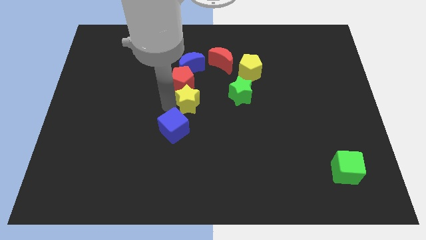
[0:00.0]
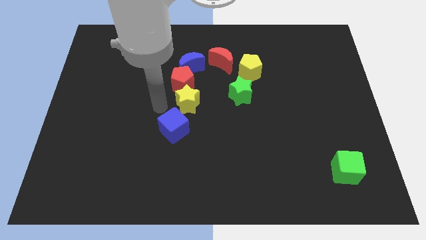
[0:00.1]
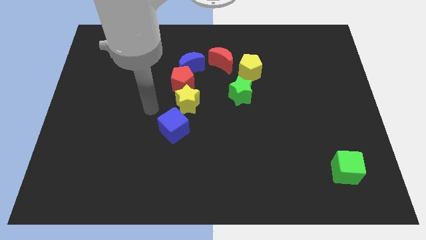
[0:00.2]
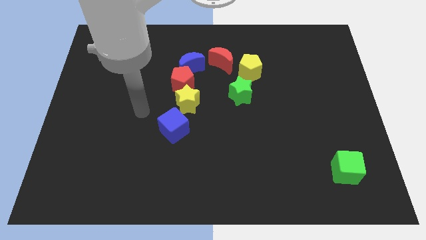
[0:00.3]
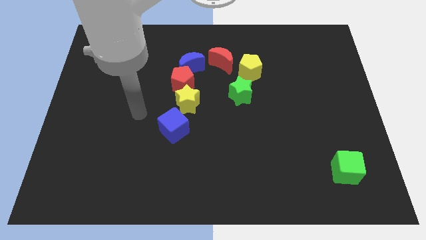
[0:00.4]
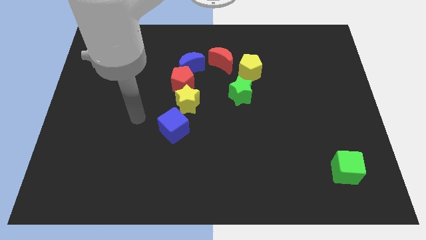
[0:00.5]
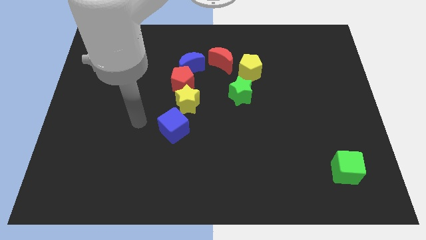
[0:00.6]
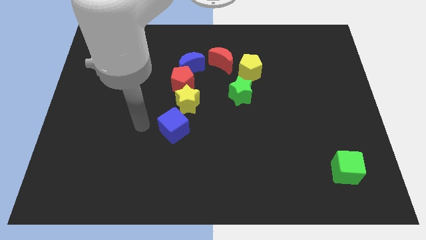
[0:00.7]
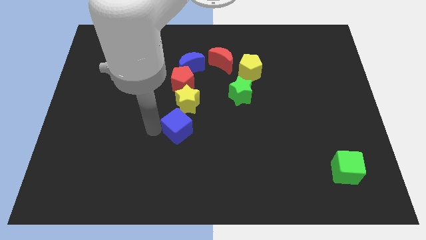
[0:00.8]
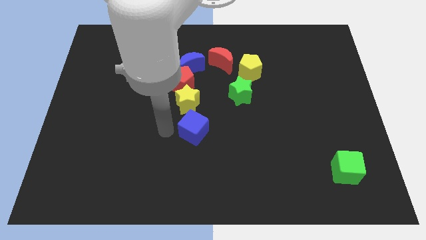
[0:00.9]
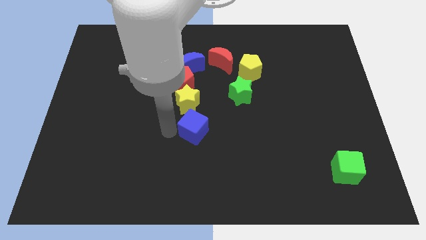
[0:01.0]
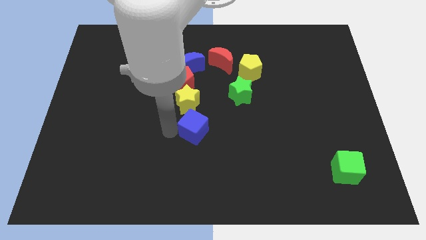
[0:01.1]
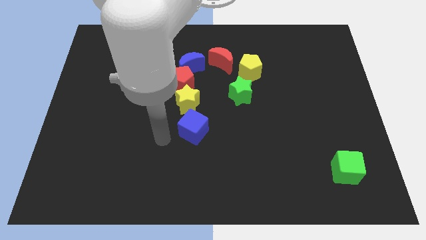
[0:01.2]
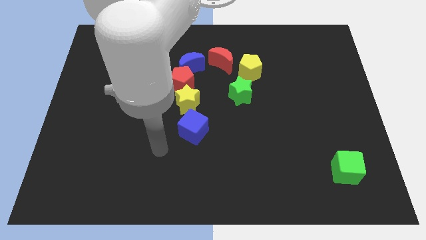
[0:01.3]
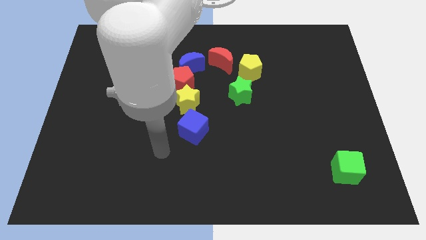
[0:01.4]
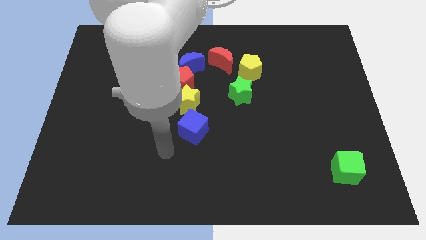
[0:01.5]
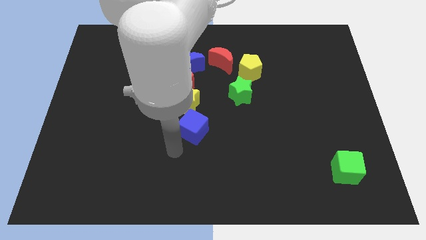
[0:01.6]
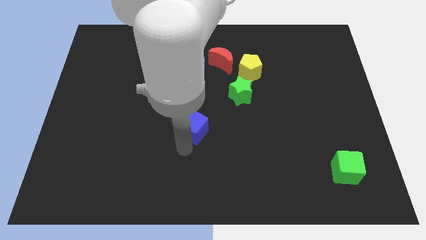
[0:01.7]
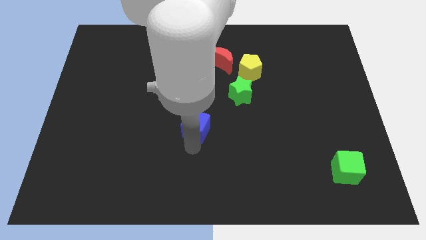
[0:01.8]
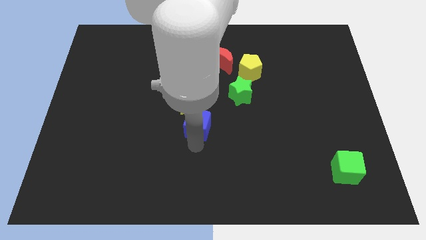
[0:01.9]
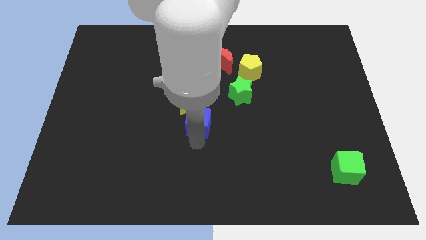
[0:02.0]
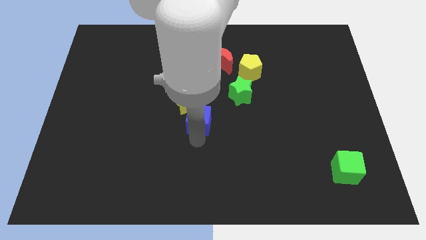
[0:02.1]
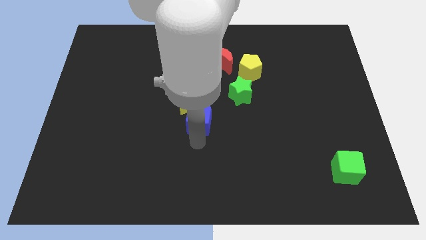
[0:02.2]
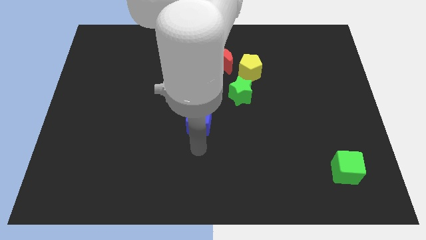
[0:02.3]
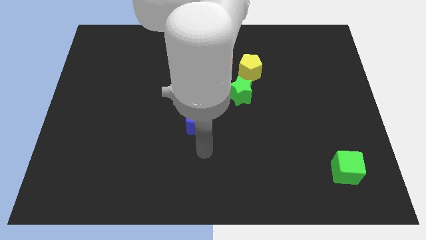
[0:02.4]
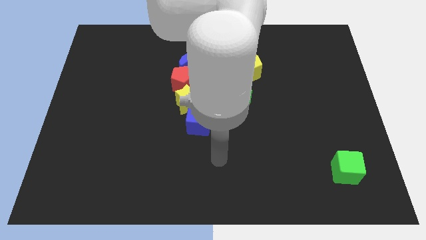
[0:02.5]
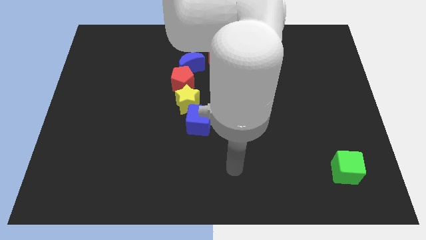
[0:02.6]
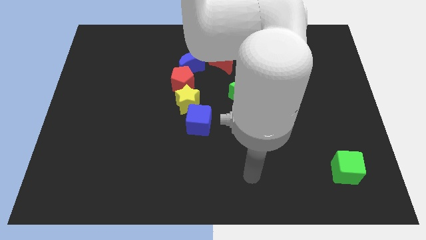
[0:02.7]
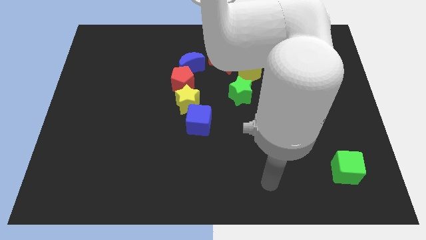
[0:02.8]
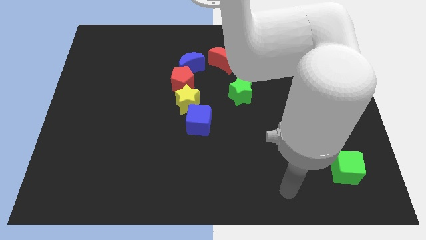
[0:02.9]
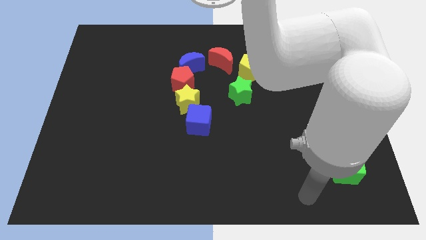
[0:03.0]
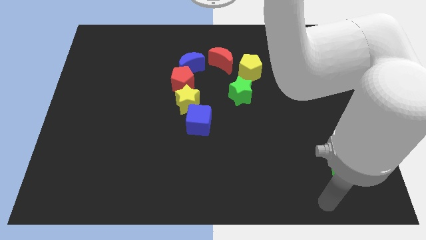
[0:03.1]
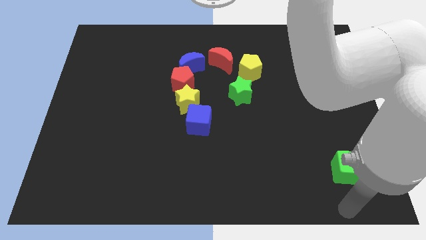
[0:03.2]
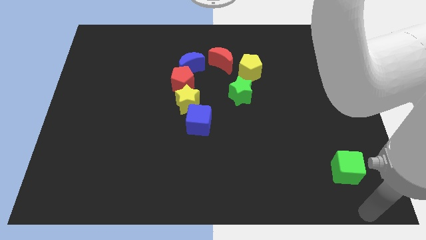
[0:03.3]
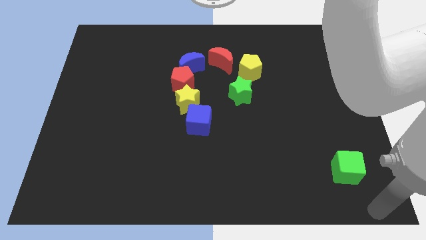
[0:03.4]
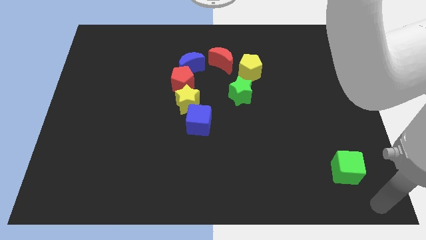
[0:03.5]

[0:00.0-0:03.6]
push blue cube below yellow star

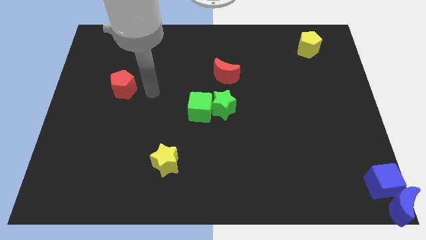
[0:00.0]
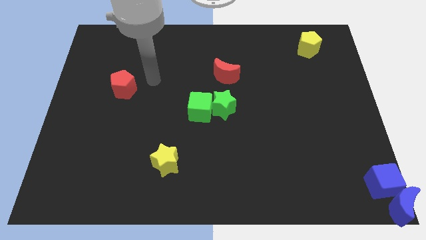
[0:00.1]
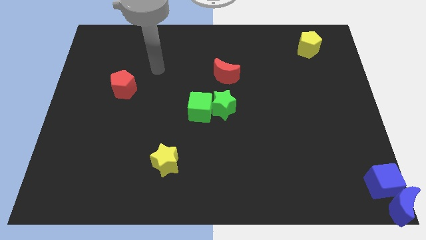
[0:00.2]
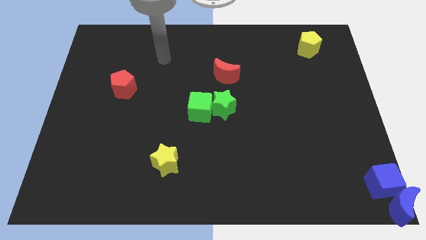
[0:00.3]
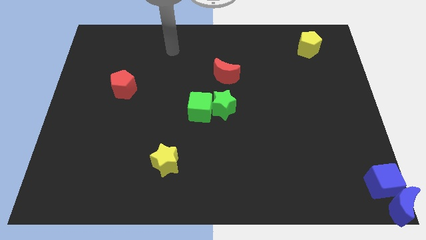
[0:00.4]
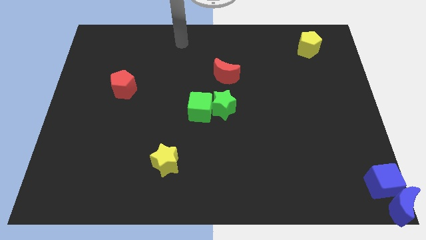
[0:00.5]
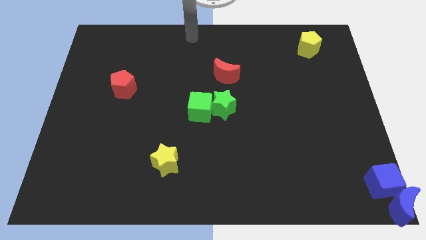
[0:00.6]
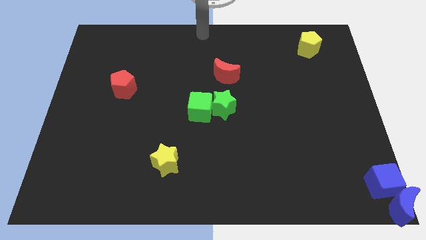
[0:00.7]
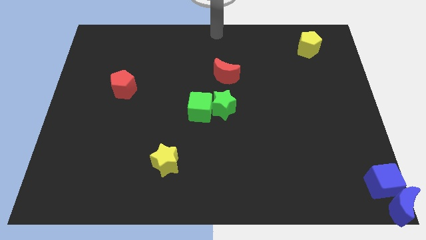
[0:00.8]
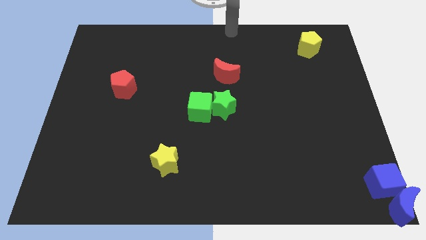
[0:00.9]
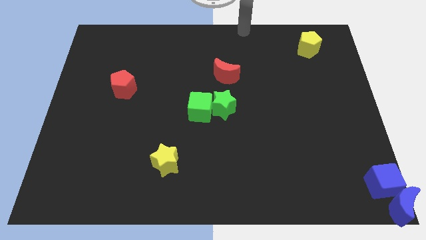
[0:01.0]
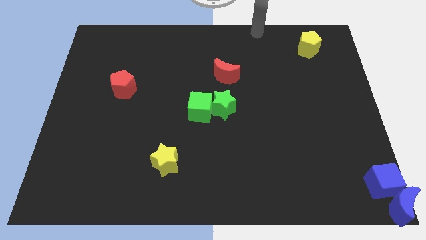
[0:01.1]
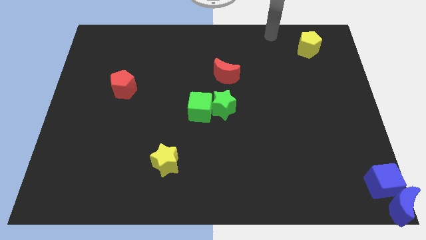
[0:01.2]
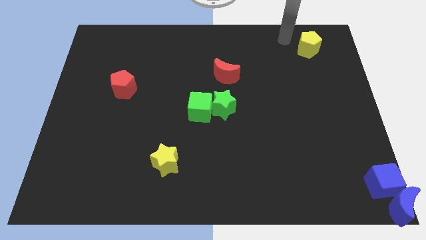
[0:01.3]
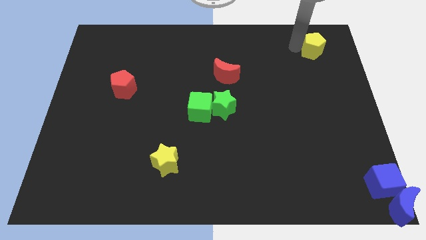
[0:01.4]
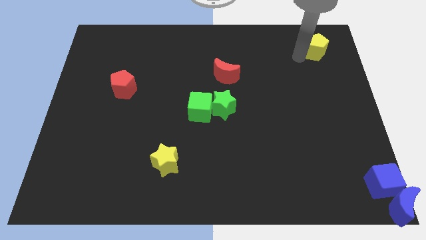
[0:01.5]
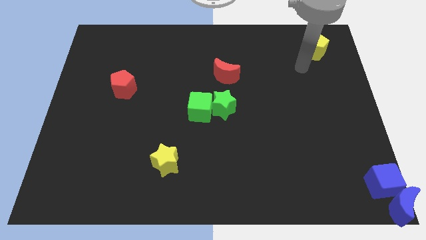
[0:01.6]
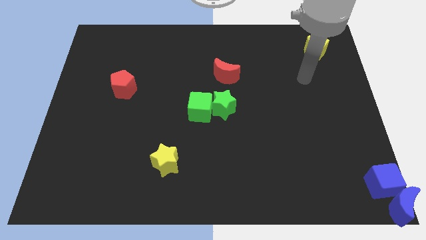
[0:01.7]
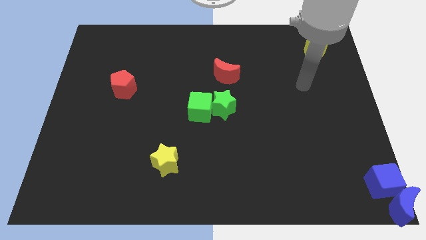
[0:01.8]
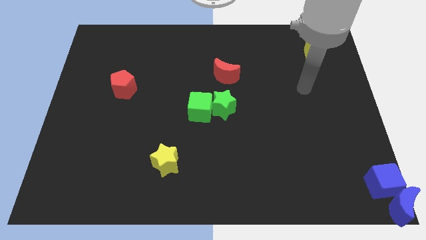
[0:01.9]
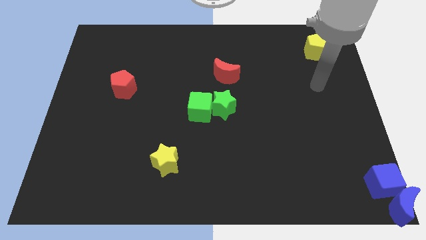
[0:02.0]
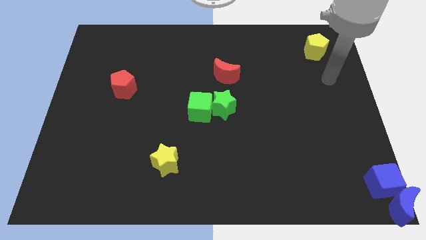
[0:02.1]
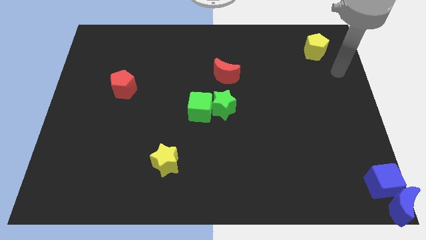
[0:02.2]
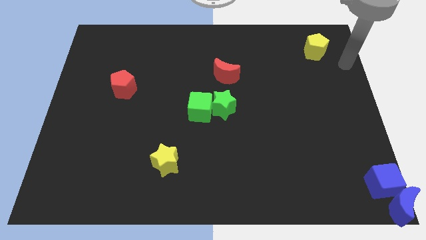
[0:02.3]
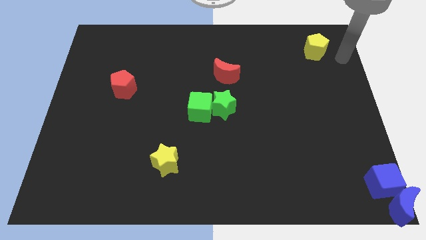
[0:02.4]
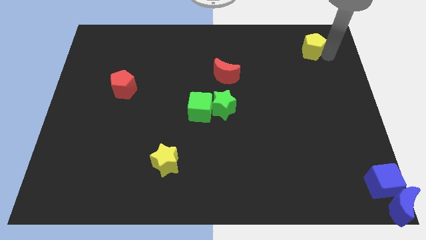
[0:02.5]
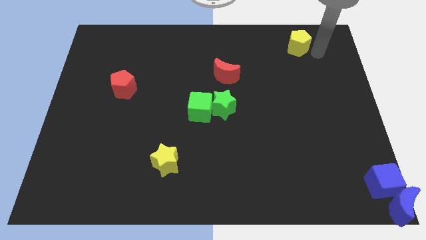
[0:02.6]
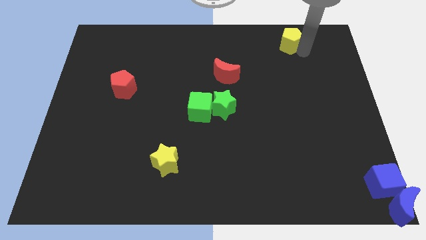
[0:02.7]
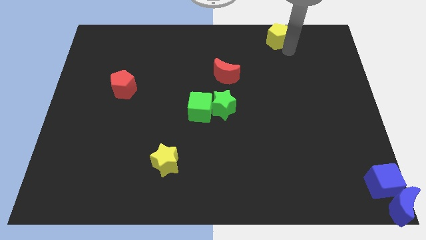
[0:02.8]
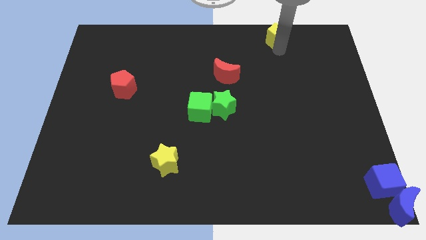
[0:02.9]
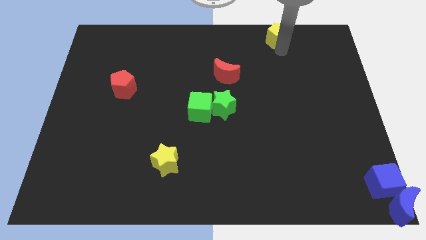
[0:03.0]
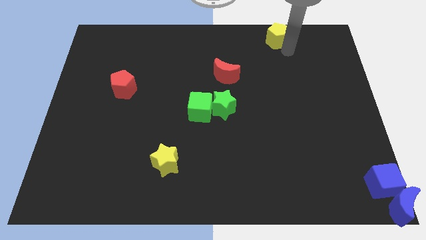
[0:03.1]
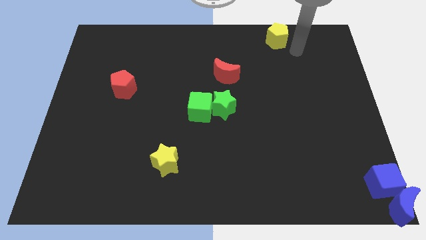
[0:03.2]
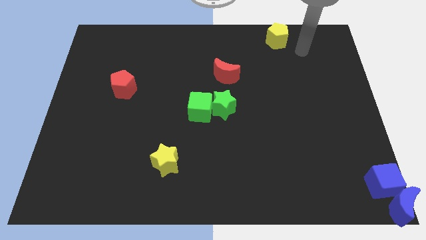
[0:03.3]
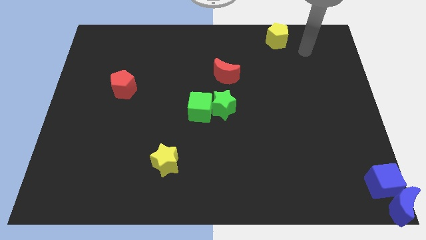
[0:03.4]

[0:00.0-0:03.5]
place the yellow pentagon diagonally on the top right side of the red crescent

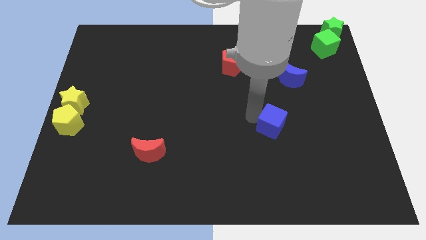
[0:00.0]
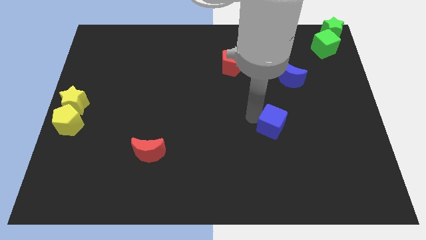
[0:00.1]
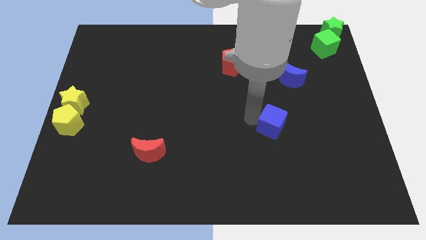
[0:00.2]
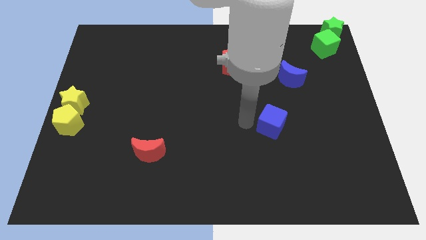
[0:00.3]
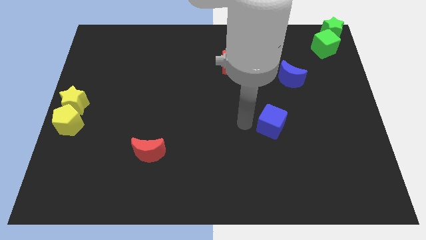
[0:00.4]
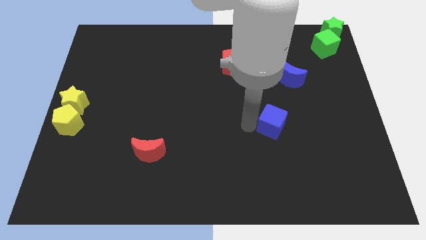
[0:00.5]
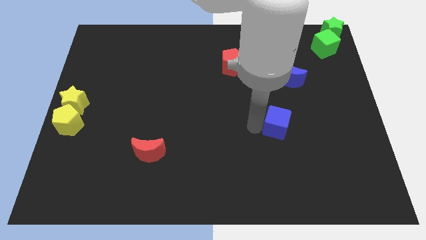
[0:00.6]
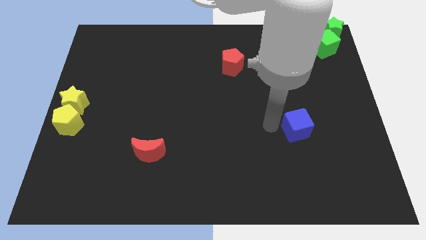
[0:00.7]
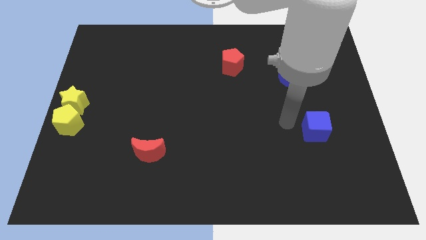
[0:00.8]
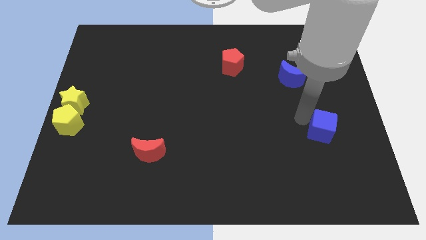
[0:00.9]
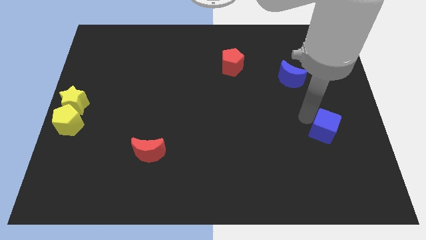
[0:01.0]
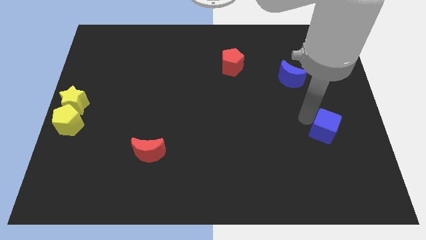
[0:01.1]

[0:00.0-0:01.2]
push the blue cube towards the right side of the board

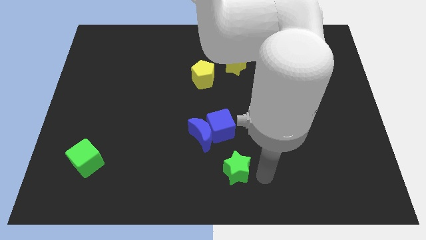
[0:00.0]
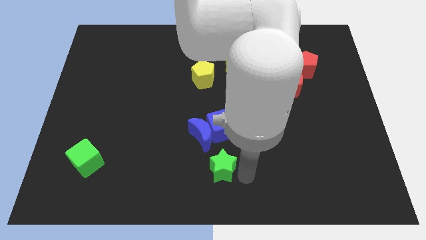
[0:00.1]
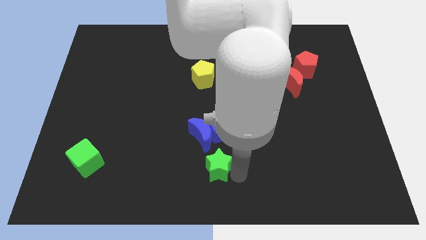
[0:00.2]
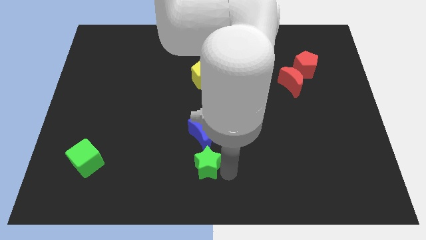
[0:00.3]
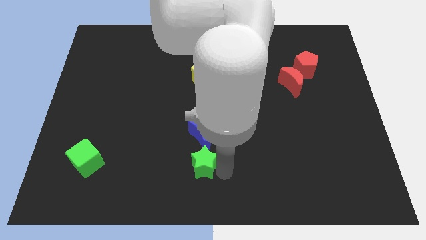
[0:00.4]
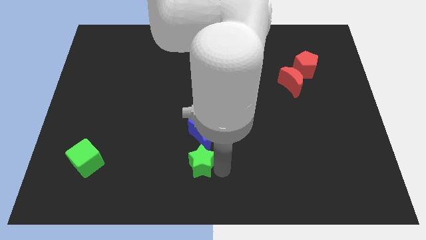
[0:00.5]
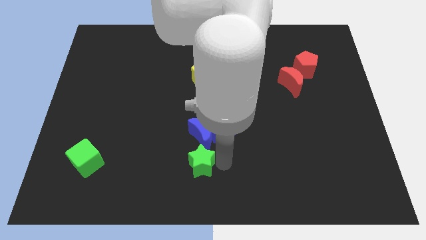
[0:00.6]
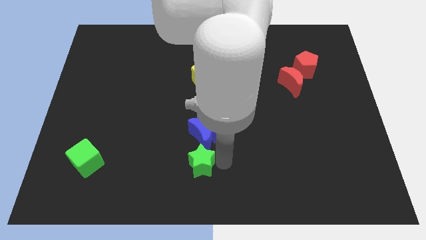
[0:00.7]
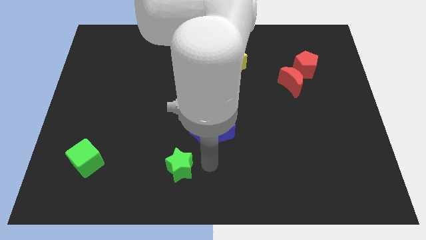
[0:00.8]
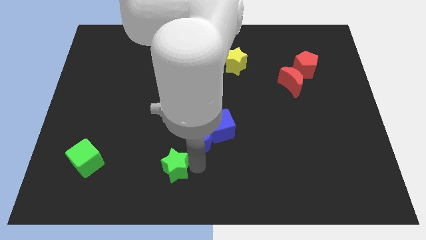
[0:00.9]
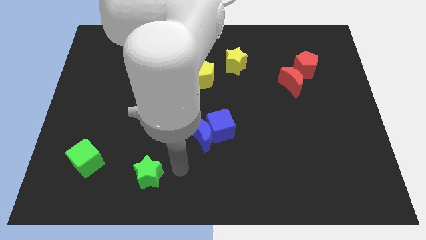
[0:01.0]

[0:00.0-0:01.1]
push the green star to the bottom left side of the board
